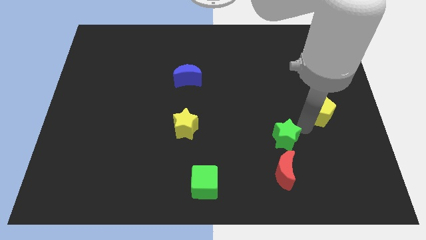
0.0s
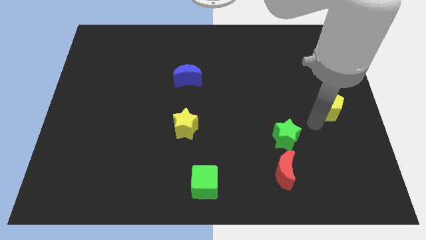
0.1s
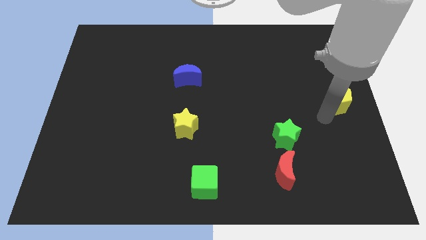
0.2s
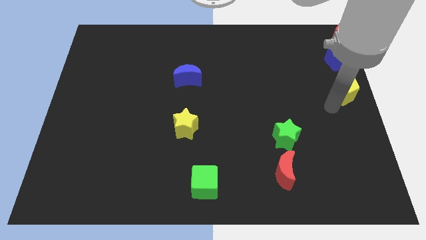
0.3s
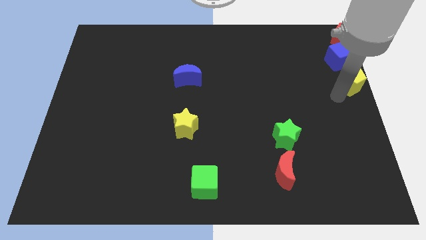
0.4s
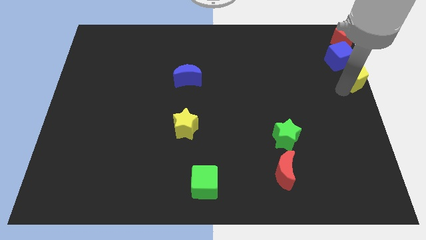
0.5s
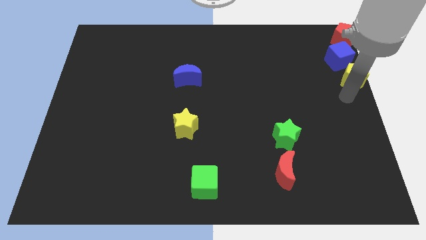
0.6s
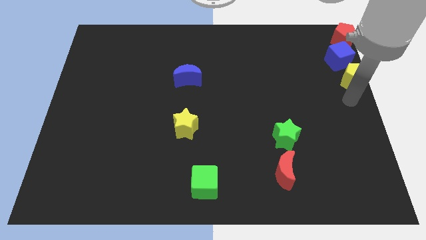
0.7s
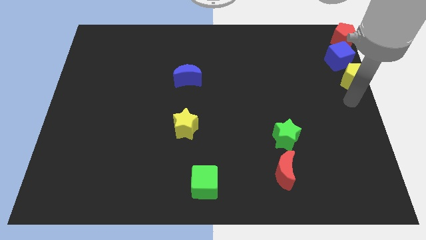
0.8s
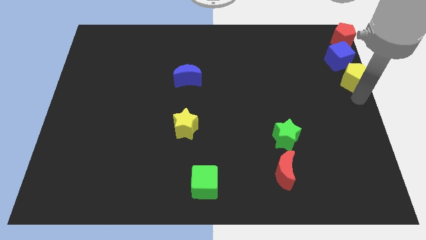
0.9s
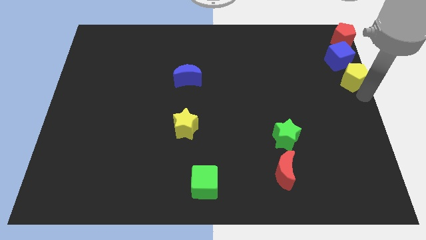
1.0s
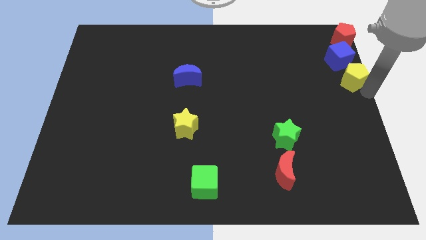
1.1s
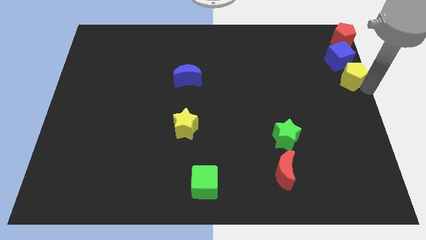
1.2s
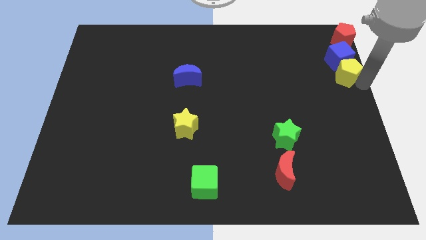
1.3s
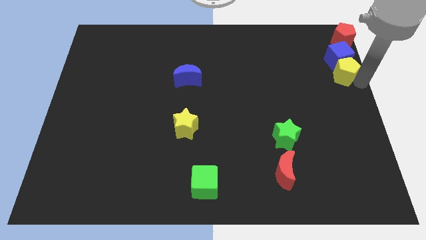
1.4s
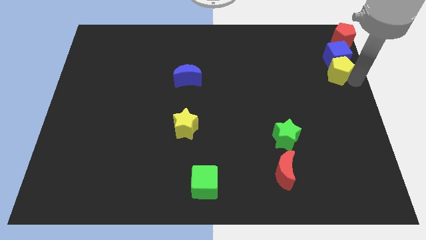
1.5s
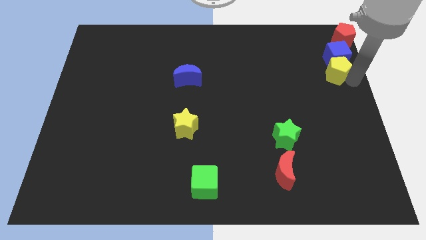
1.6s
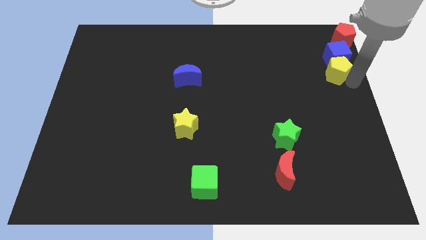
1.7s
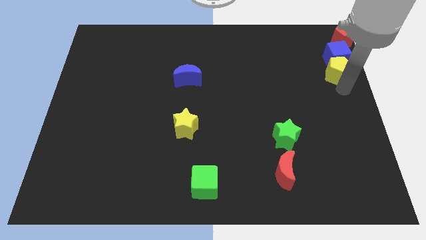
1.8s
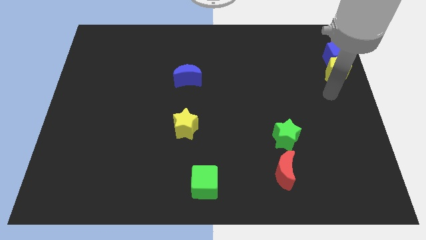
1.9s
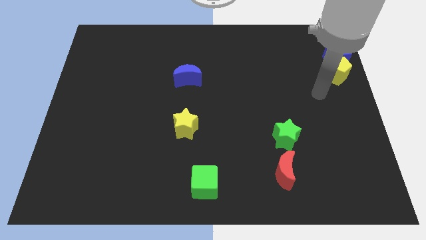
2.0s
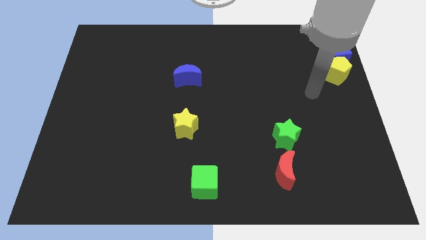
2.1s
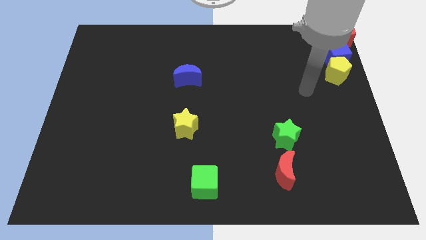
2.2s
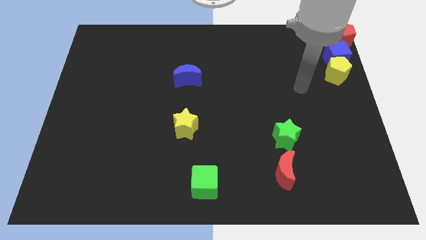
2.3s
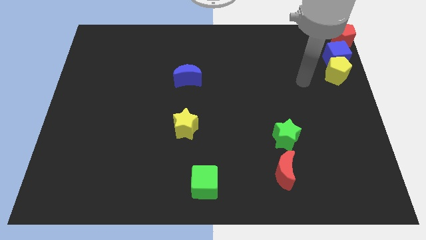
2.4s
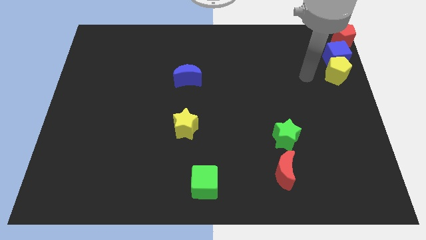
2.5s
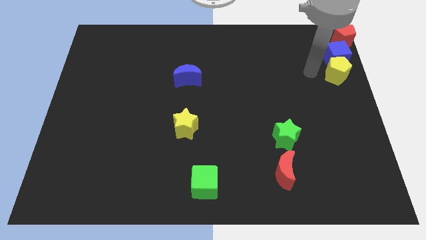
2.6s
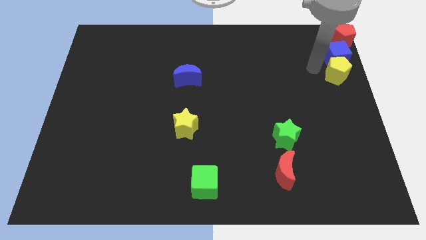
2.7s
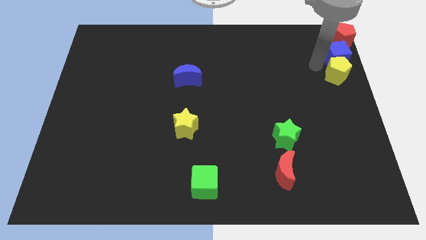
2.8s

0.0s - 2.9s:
move the yellow pentagon below the blue cube

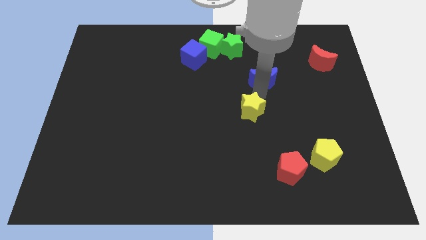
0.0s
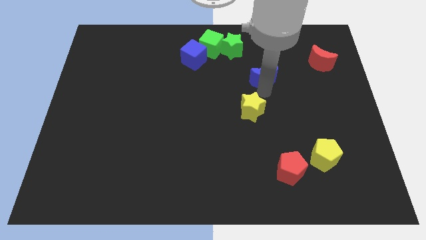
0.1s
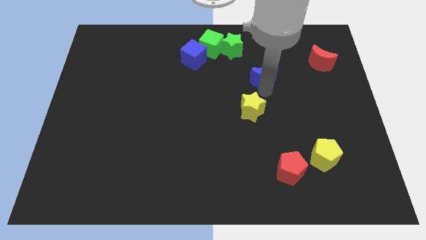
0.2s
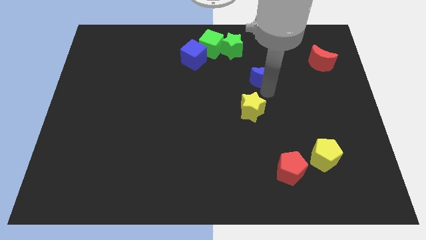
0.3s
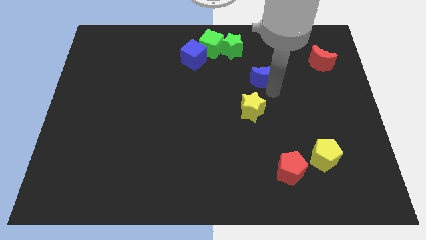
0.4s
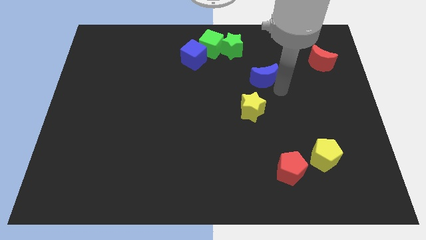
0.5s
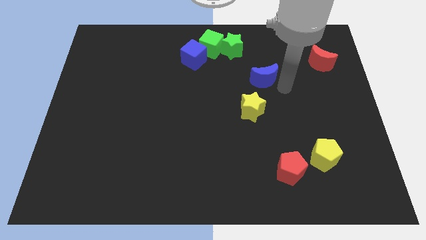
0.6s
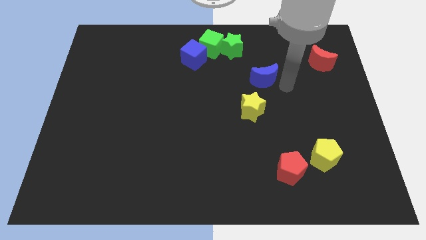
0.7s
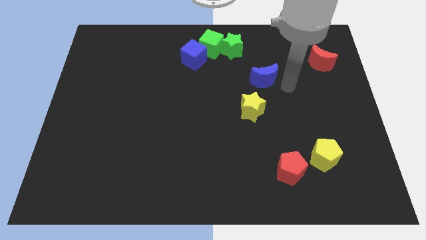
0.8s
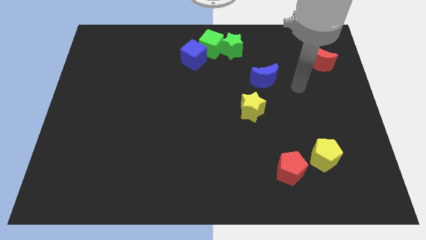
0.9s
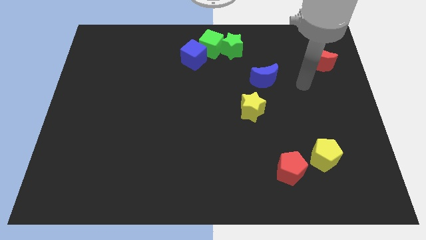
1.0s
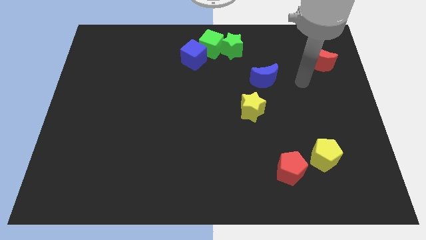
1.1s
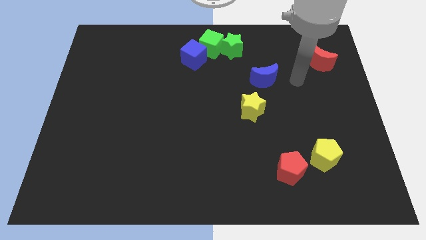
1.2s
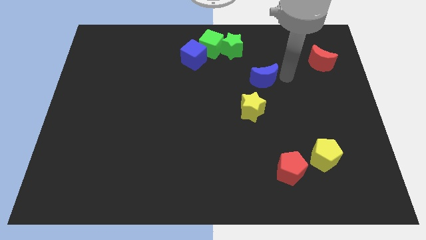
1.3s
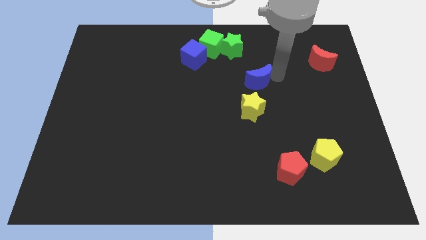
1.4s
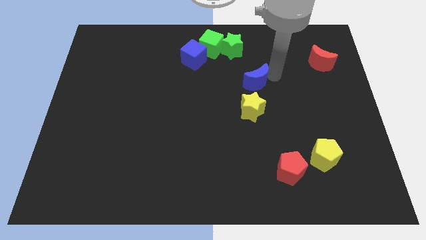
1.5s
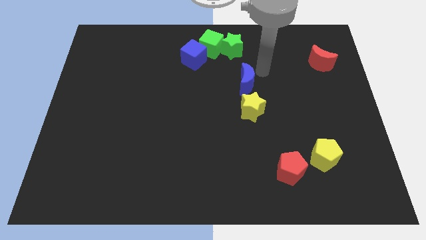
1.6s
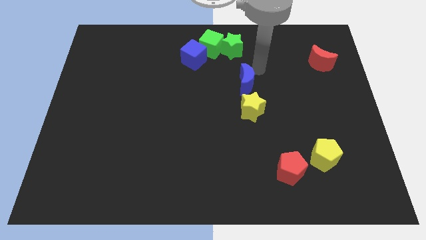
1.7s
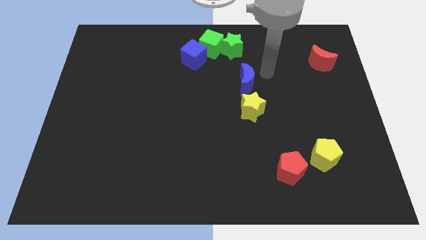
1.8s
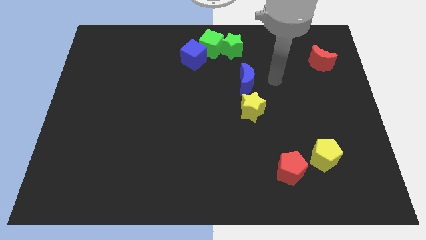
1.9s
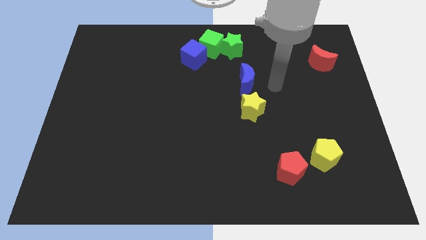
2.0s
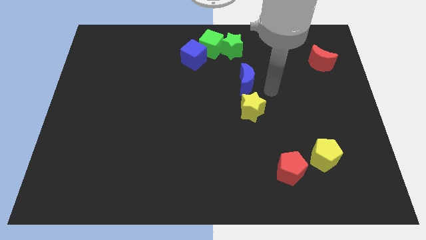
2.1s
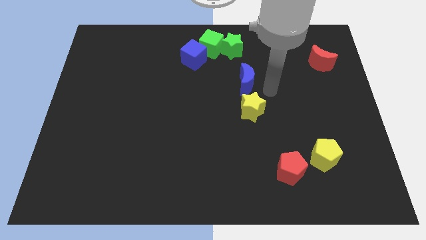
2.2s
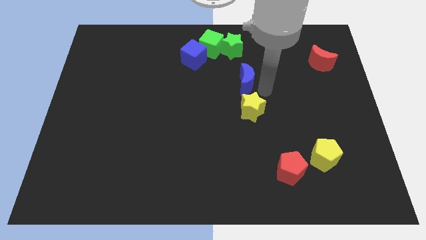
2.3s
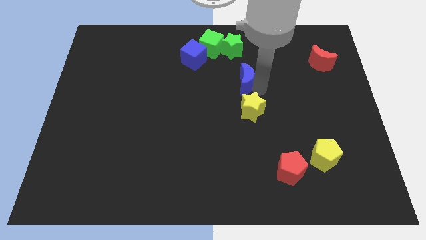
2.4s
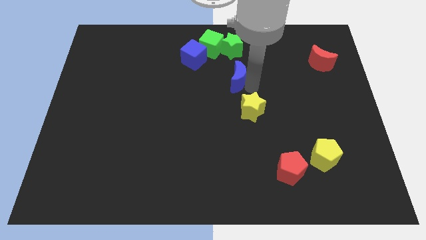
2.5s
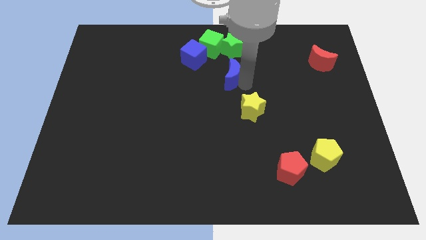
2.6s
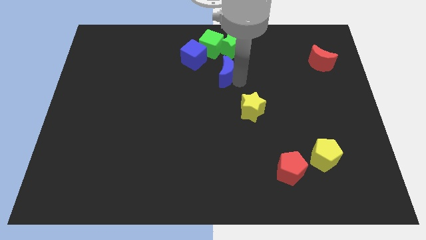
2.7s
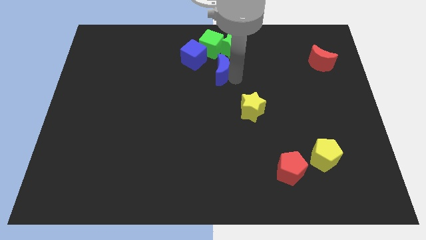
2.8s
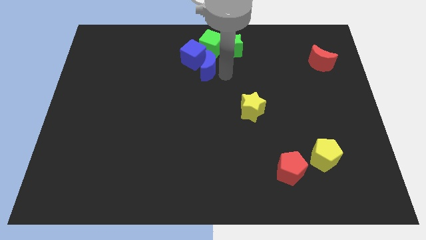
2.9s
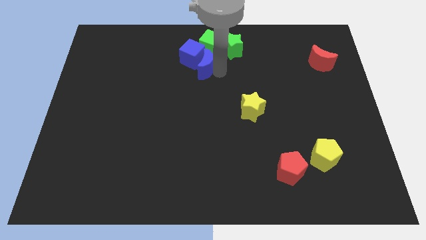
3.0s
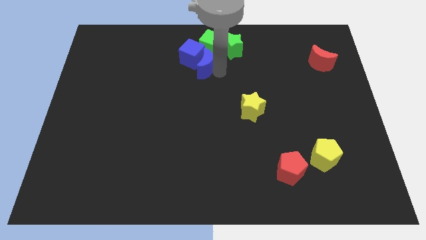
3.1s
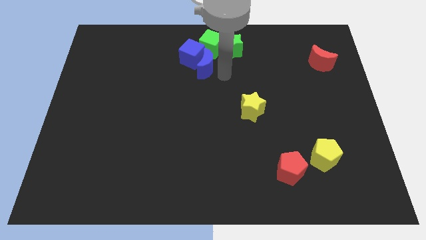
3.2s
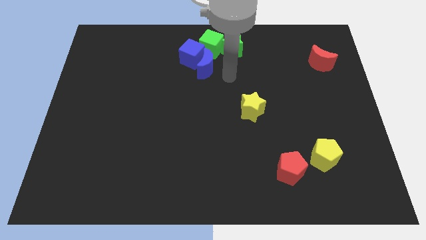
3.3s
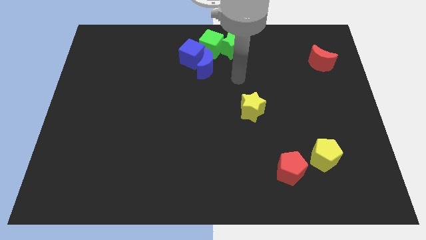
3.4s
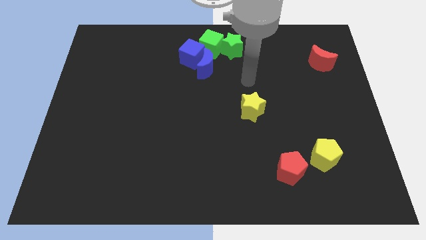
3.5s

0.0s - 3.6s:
move blue moon towards blue cube

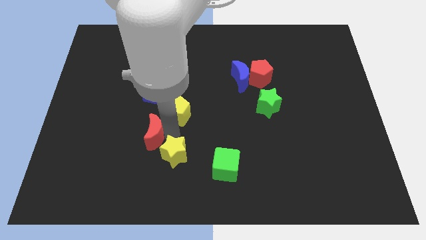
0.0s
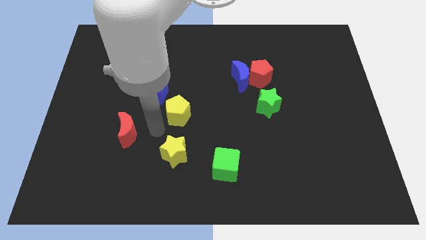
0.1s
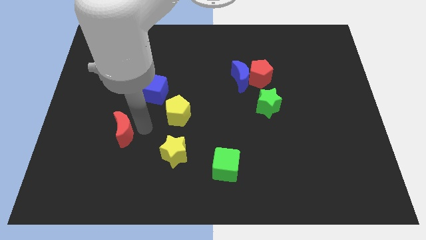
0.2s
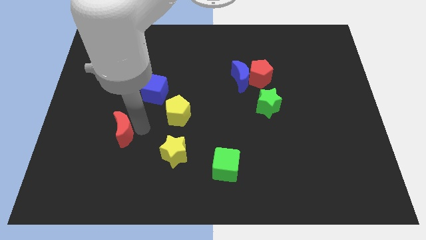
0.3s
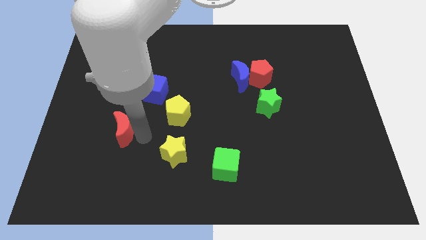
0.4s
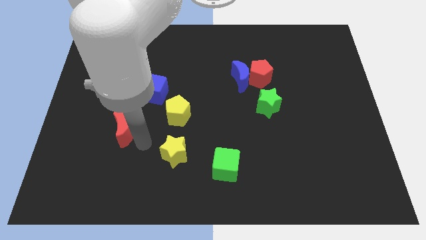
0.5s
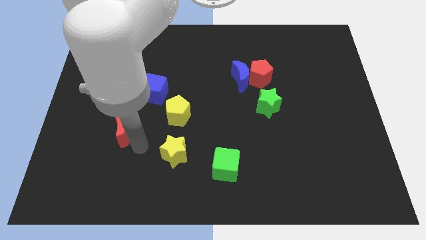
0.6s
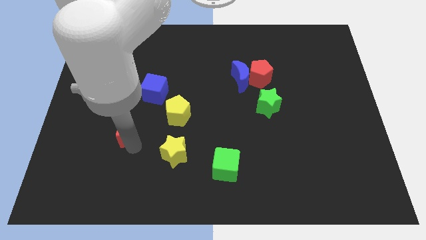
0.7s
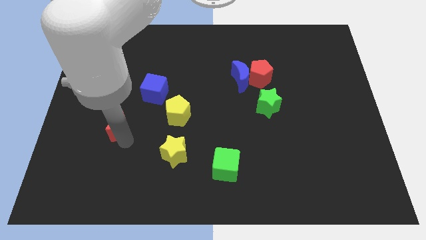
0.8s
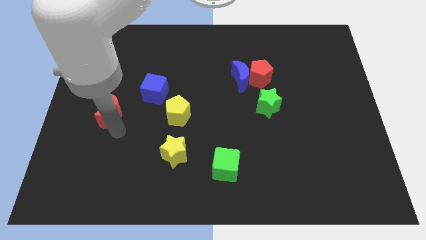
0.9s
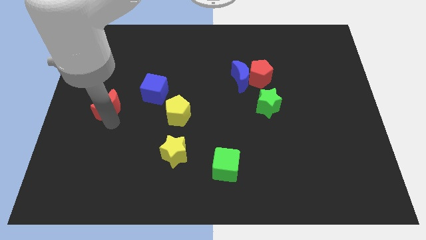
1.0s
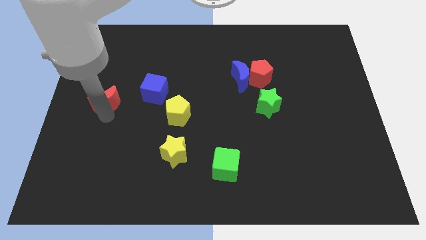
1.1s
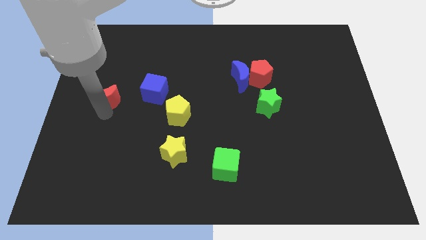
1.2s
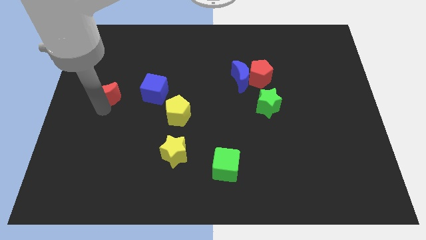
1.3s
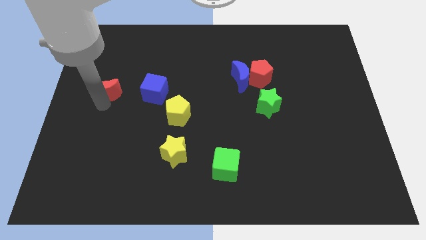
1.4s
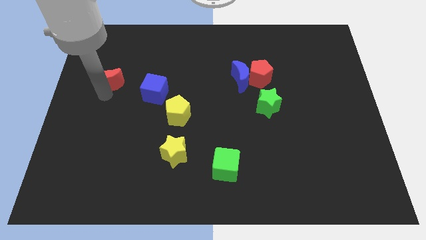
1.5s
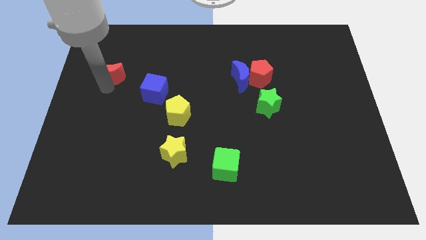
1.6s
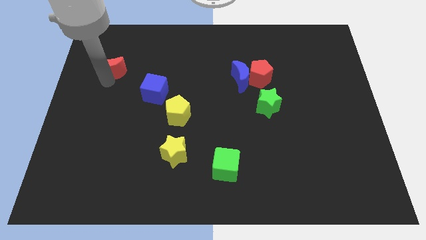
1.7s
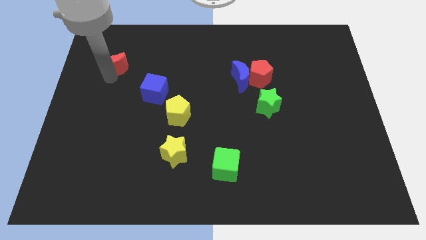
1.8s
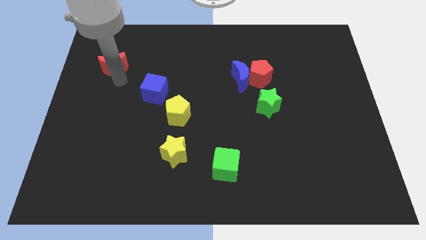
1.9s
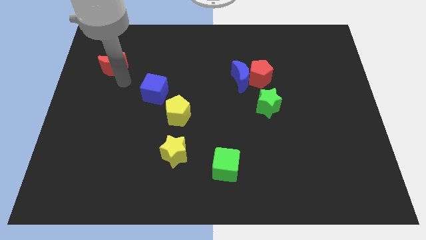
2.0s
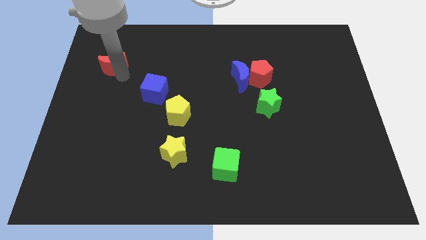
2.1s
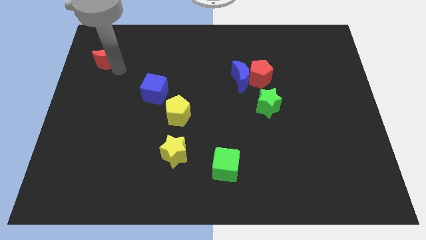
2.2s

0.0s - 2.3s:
push the red crescent to the left top corner of the board

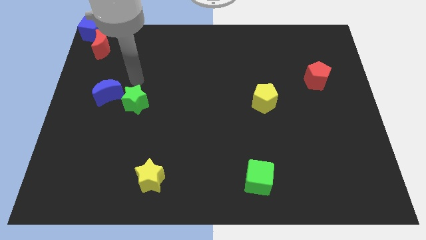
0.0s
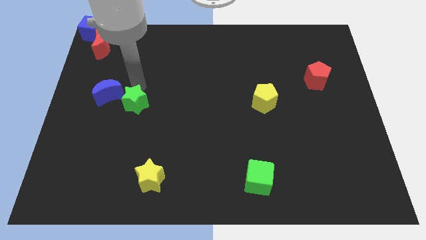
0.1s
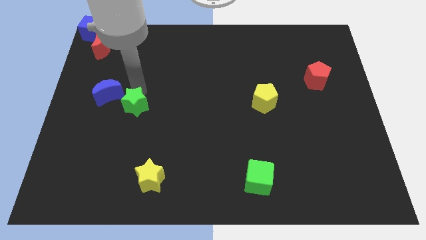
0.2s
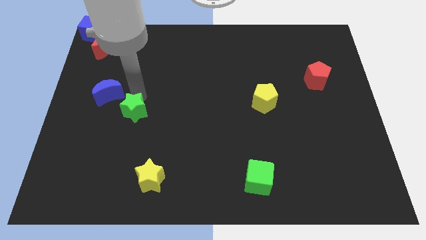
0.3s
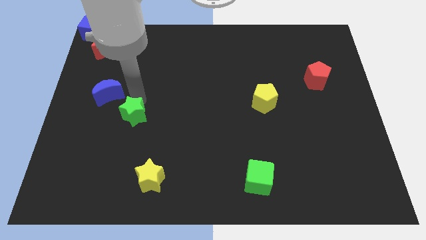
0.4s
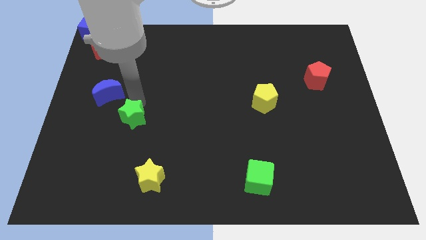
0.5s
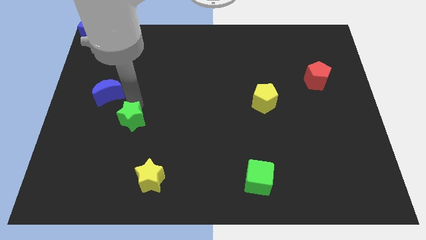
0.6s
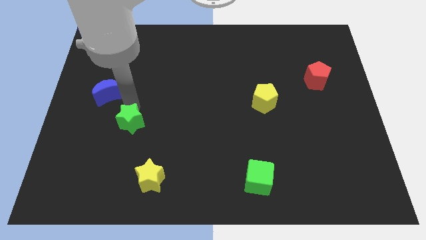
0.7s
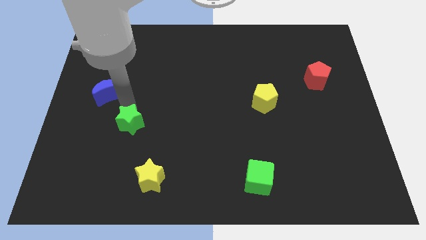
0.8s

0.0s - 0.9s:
slightly push the green star towards the top left of the board
